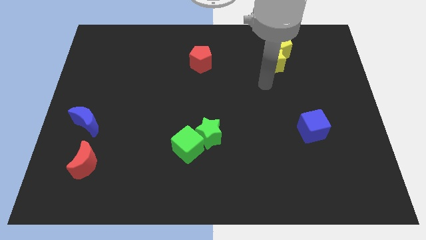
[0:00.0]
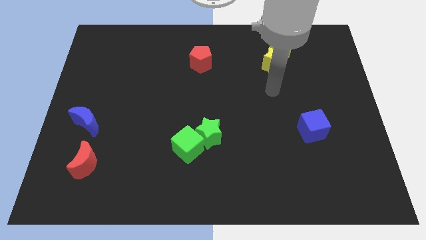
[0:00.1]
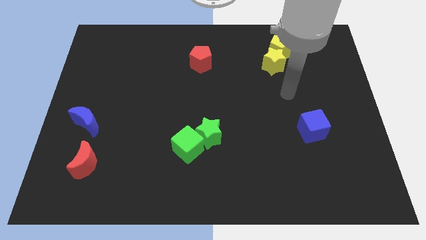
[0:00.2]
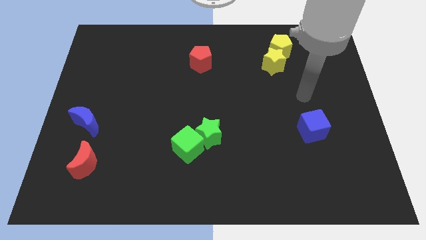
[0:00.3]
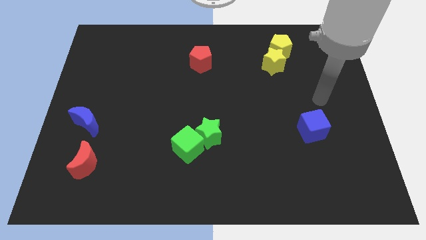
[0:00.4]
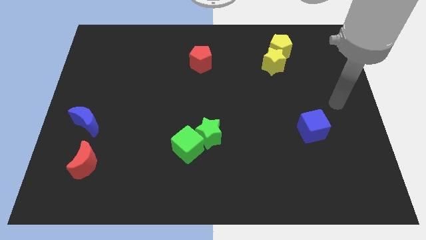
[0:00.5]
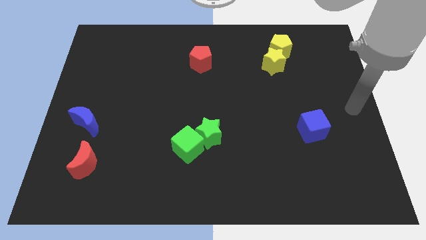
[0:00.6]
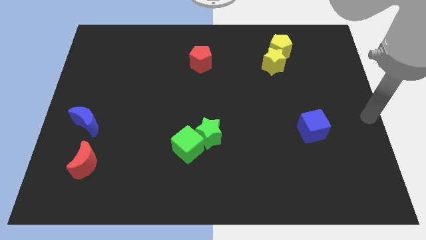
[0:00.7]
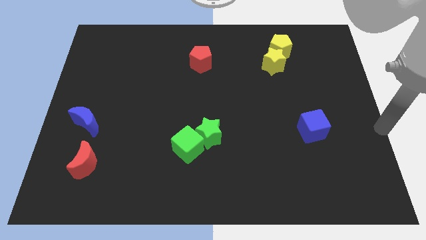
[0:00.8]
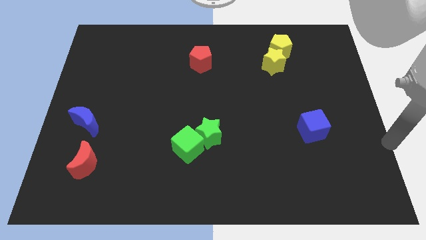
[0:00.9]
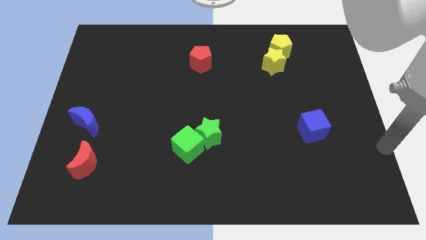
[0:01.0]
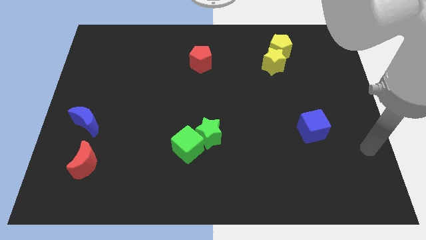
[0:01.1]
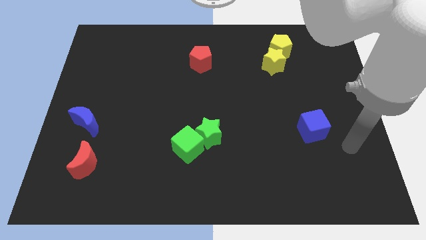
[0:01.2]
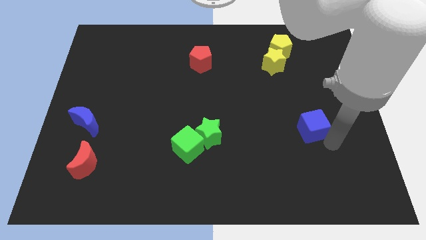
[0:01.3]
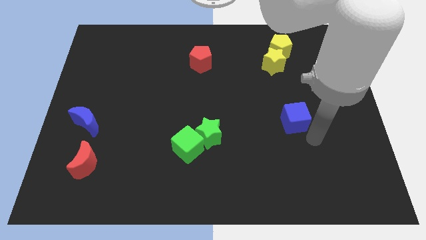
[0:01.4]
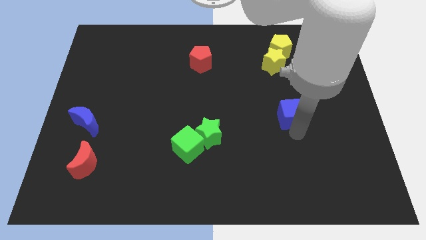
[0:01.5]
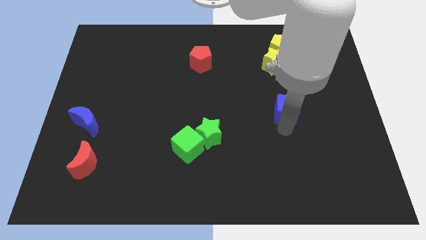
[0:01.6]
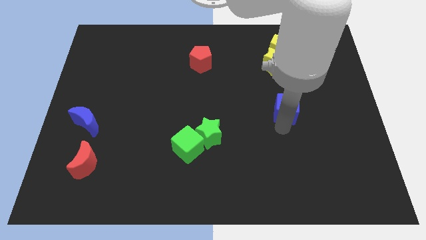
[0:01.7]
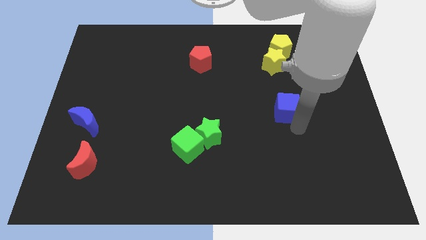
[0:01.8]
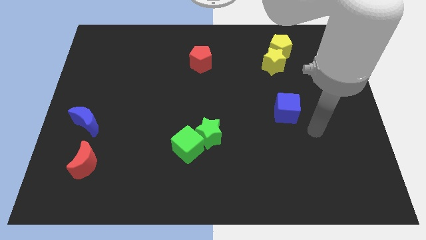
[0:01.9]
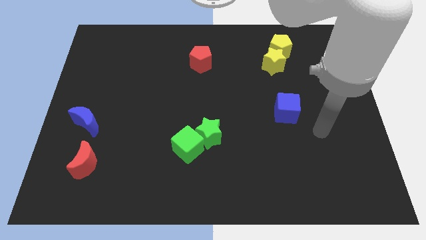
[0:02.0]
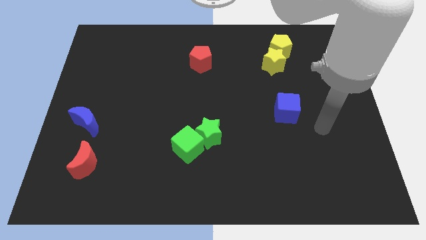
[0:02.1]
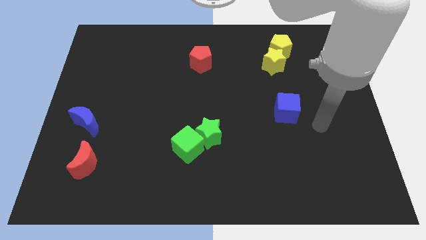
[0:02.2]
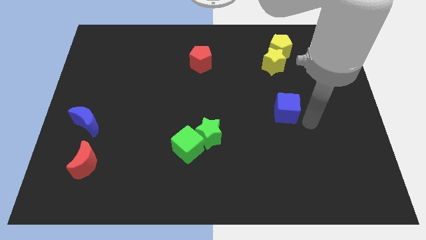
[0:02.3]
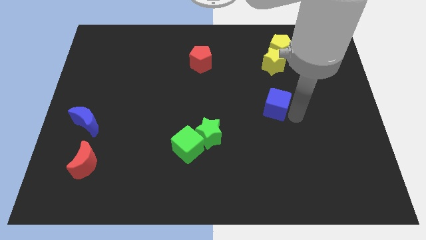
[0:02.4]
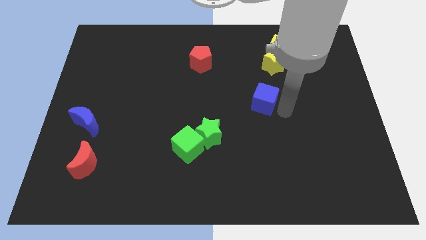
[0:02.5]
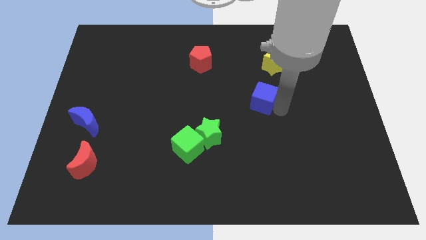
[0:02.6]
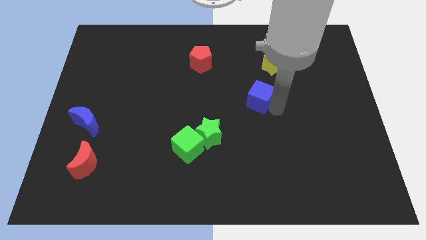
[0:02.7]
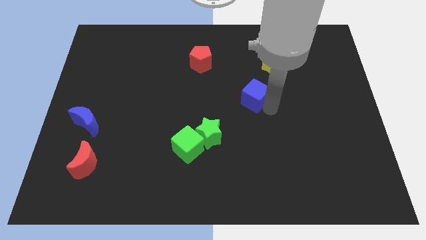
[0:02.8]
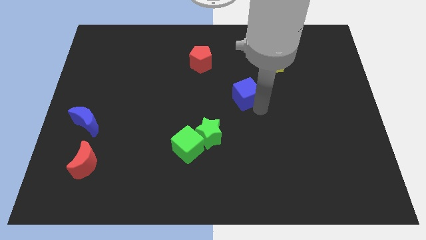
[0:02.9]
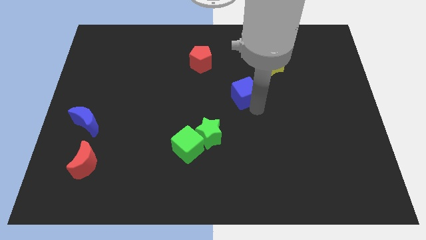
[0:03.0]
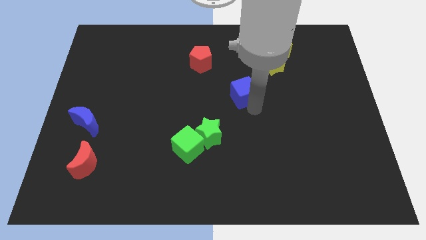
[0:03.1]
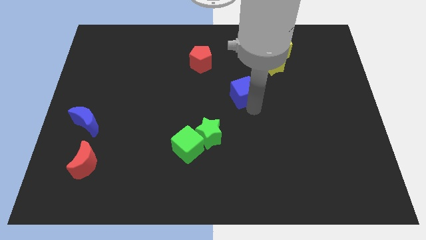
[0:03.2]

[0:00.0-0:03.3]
move the blue cube to the bottom left of the yellow star

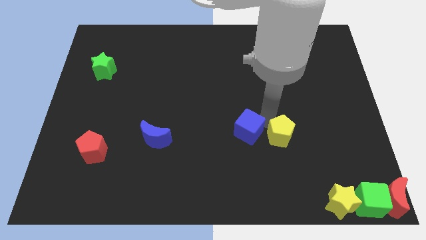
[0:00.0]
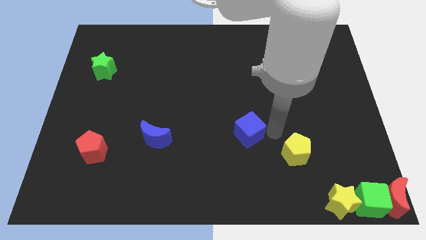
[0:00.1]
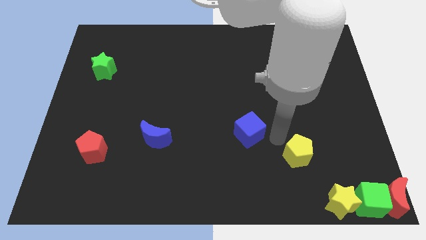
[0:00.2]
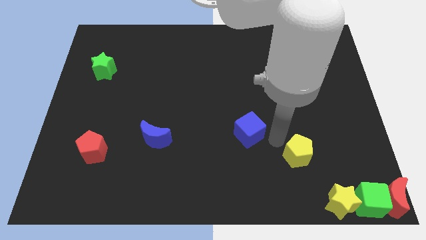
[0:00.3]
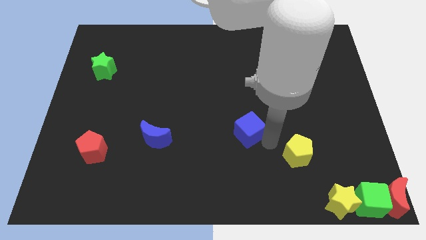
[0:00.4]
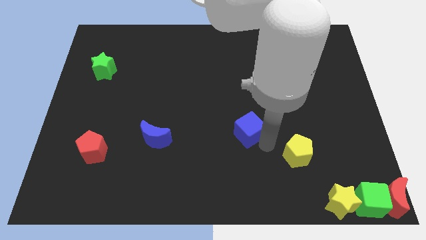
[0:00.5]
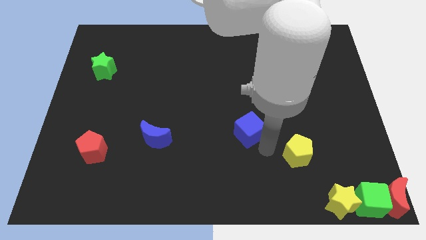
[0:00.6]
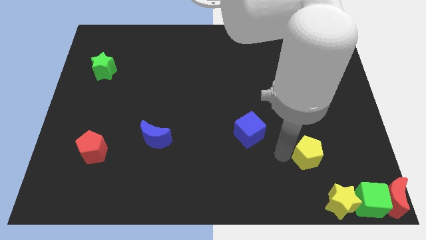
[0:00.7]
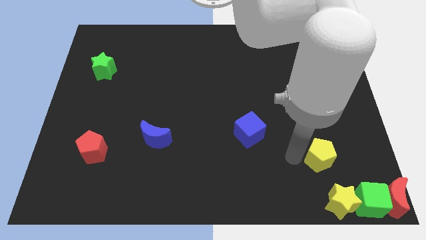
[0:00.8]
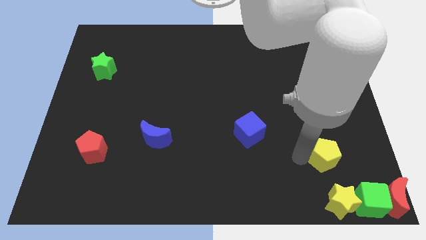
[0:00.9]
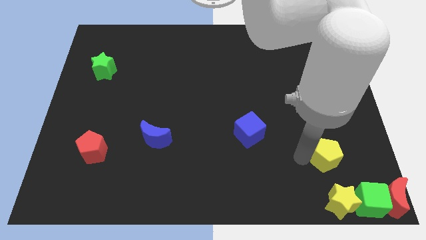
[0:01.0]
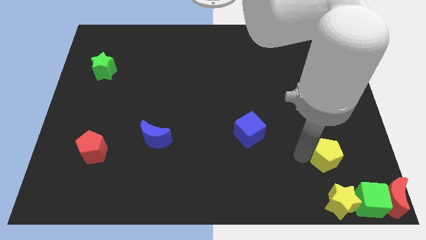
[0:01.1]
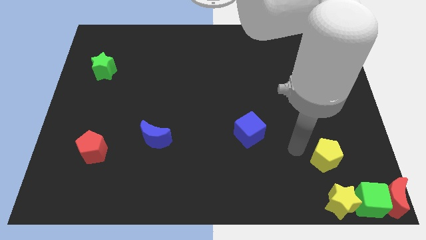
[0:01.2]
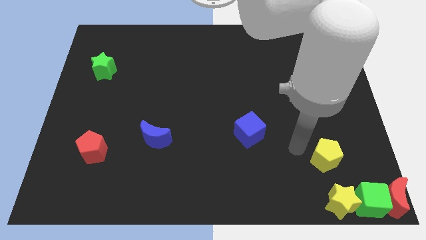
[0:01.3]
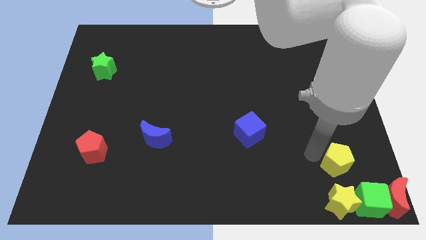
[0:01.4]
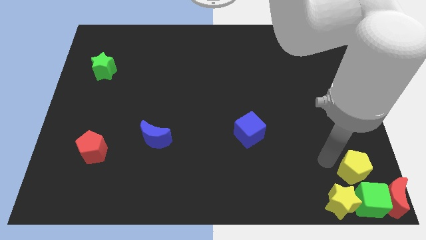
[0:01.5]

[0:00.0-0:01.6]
separate the yellow pentagon from the blue cube

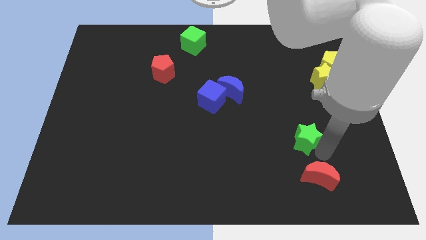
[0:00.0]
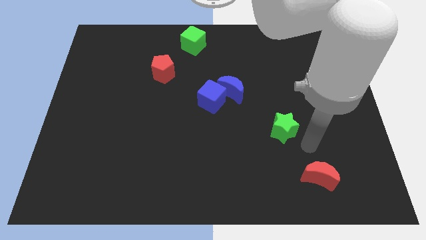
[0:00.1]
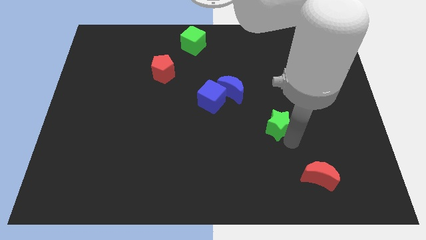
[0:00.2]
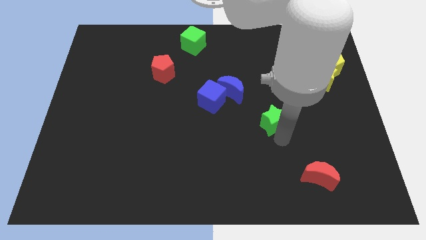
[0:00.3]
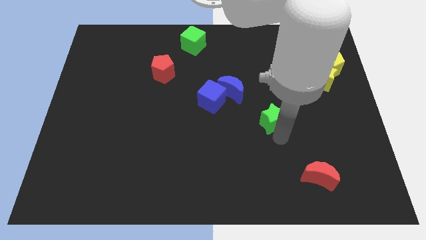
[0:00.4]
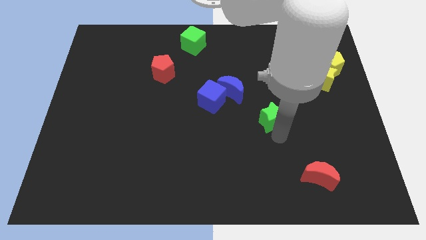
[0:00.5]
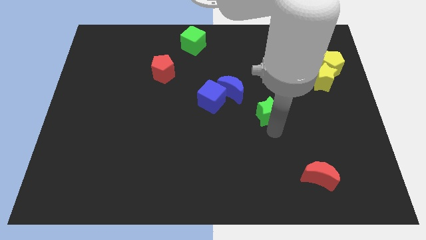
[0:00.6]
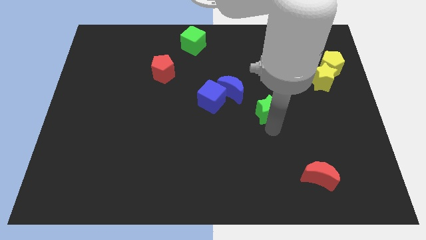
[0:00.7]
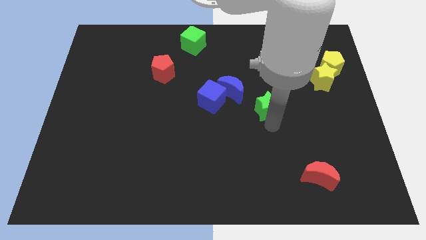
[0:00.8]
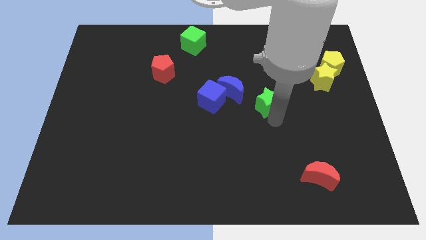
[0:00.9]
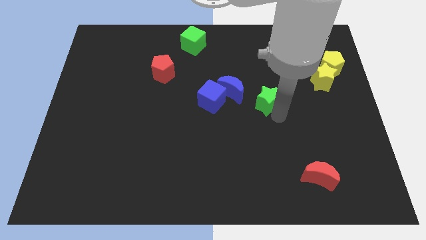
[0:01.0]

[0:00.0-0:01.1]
move the green star to the center

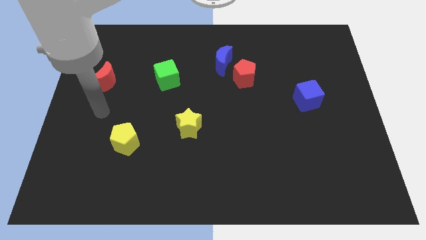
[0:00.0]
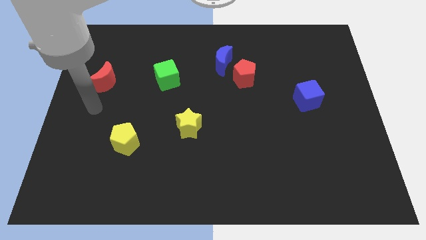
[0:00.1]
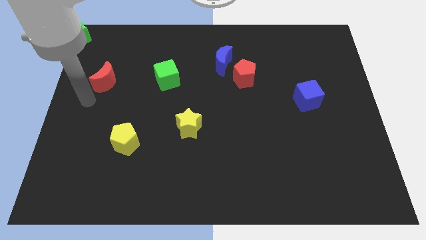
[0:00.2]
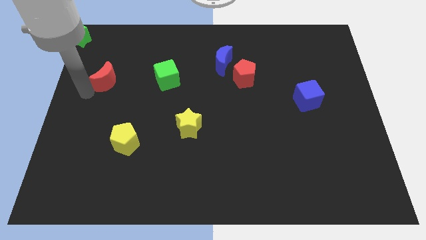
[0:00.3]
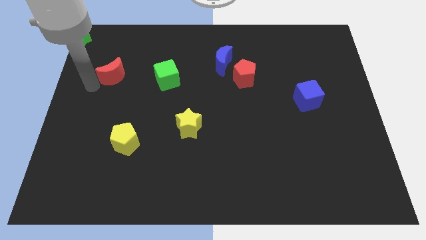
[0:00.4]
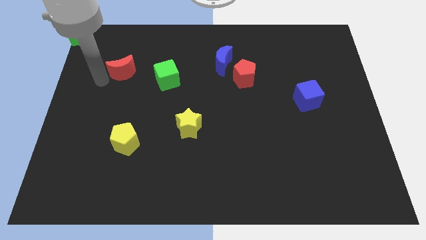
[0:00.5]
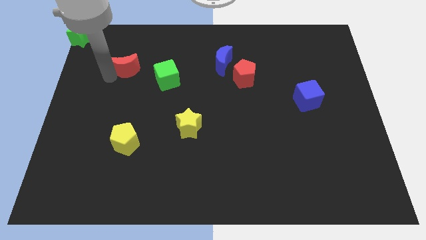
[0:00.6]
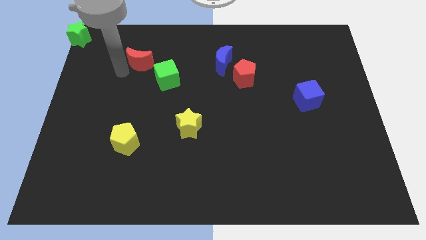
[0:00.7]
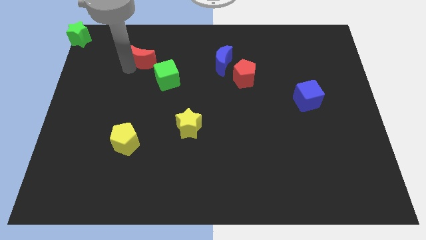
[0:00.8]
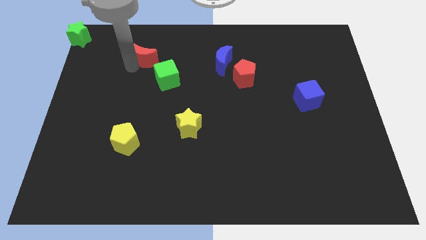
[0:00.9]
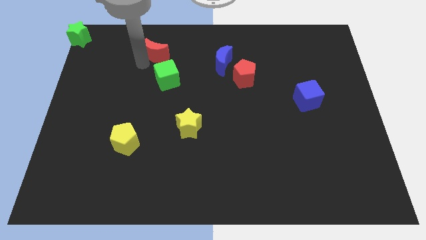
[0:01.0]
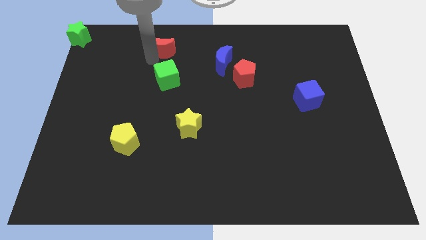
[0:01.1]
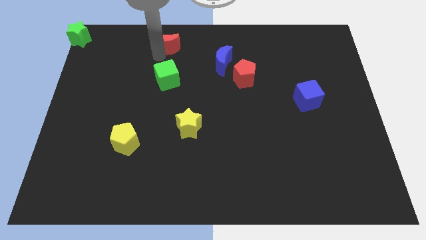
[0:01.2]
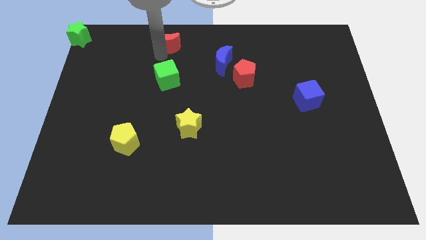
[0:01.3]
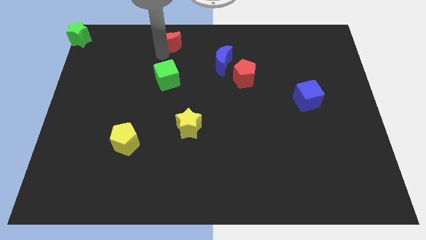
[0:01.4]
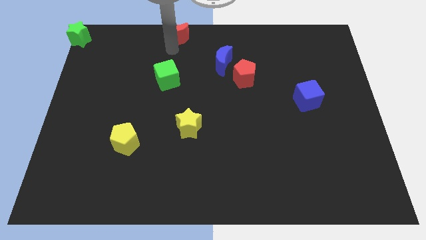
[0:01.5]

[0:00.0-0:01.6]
move the red moon above the green cube

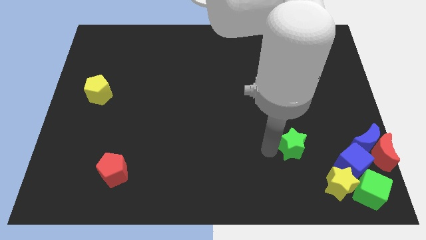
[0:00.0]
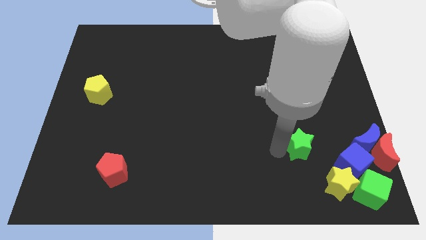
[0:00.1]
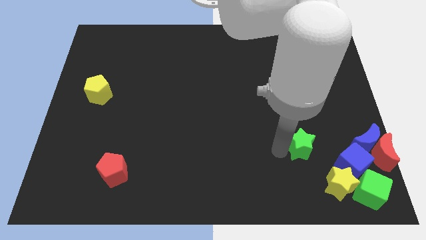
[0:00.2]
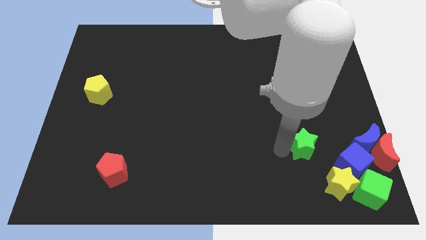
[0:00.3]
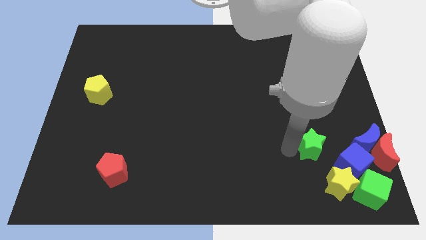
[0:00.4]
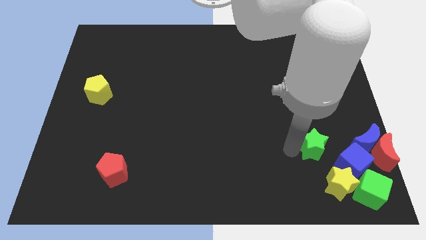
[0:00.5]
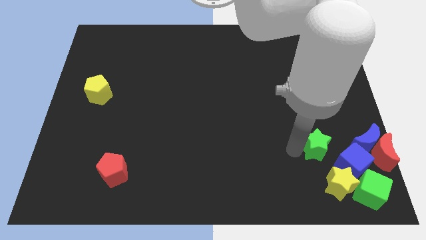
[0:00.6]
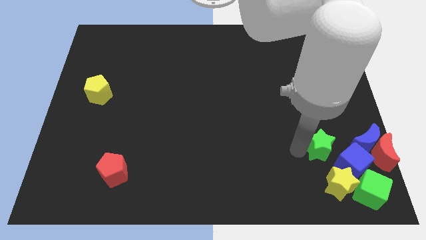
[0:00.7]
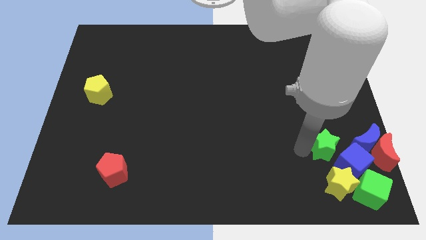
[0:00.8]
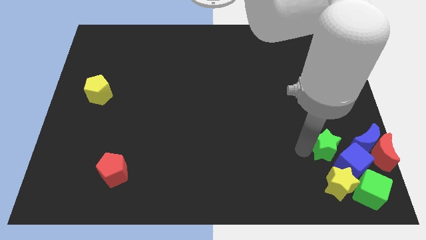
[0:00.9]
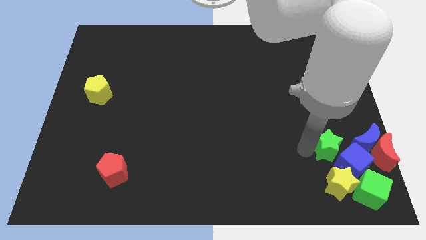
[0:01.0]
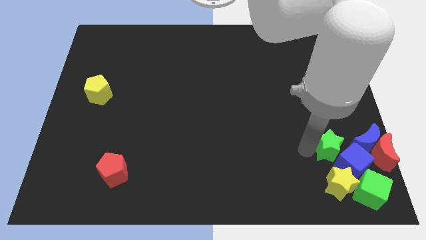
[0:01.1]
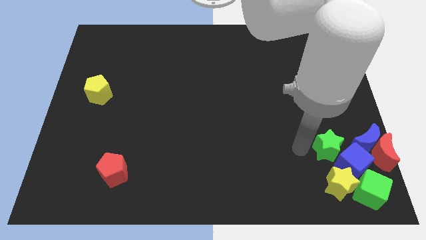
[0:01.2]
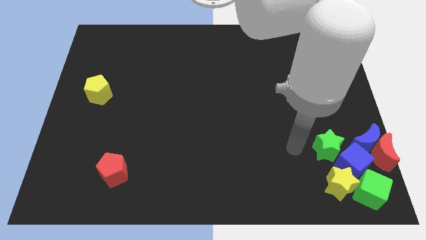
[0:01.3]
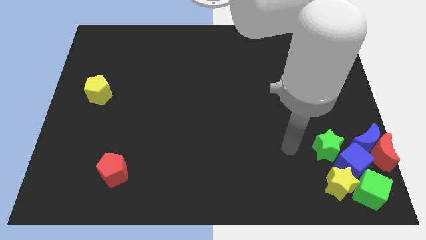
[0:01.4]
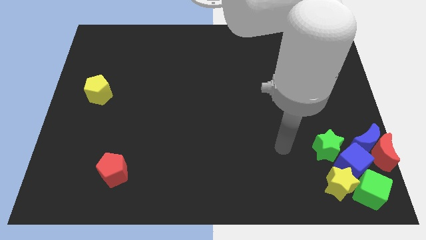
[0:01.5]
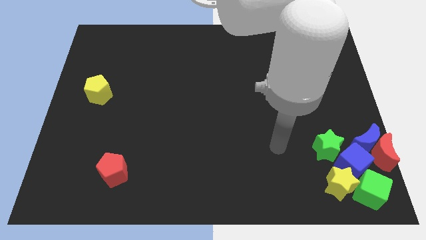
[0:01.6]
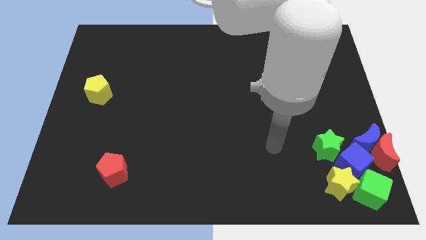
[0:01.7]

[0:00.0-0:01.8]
place the green star to the left top of the blue cube
